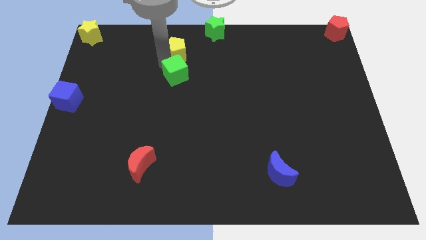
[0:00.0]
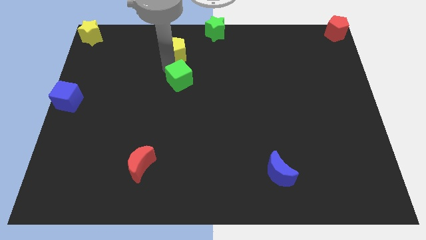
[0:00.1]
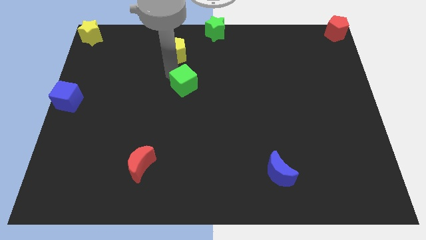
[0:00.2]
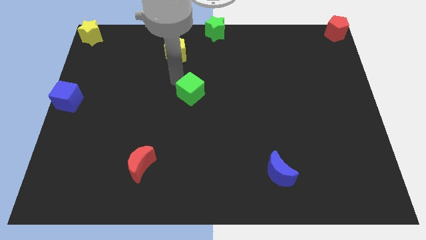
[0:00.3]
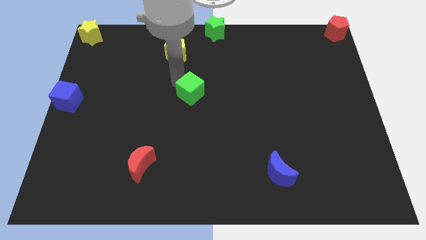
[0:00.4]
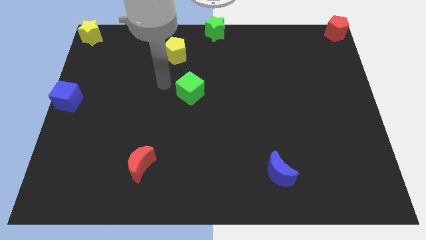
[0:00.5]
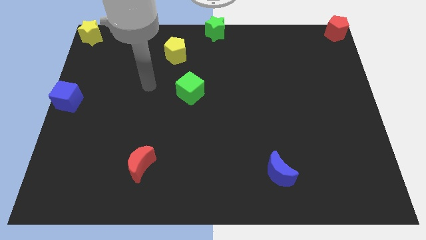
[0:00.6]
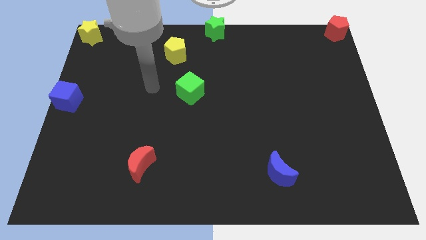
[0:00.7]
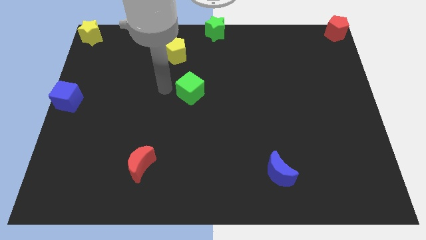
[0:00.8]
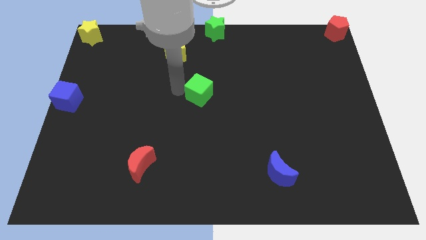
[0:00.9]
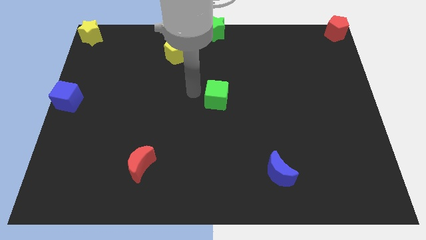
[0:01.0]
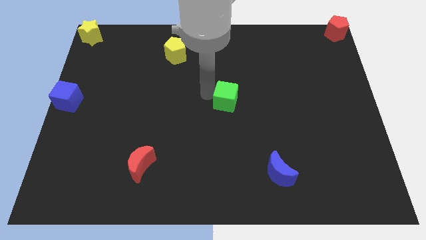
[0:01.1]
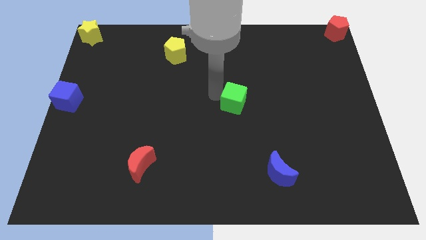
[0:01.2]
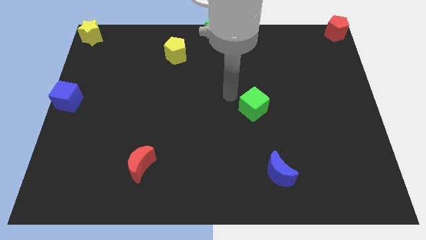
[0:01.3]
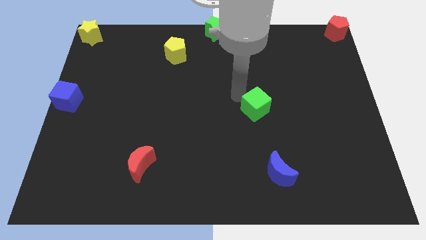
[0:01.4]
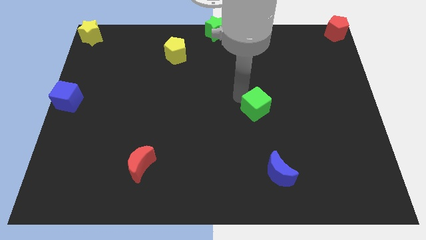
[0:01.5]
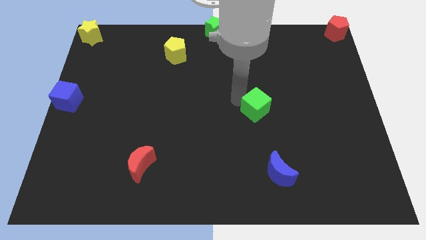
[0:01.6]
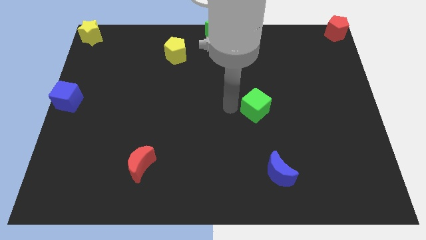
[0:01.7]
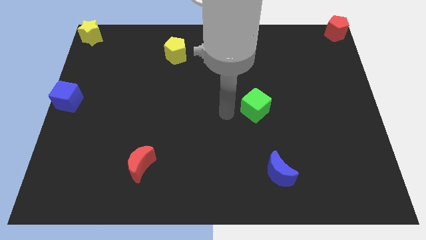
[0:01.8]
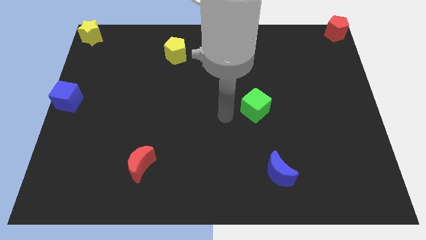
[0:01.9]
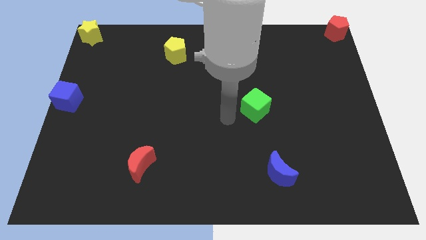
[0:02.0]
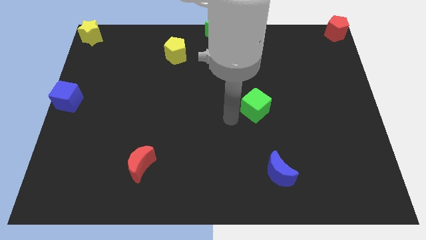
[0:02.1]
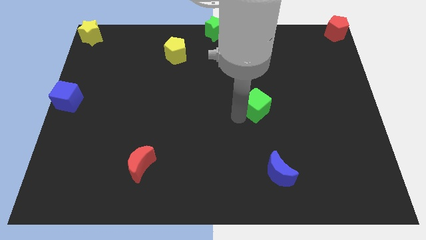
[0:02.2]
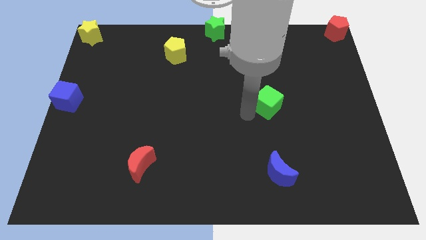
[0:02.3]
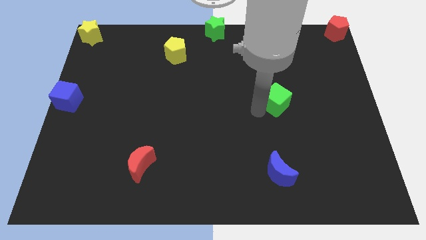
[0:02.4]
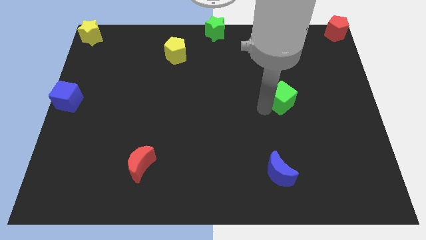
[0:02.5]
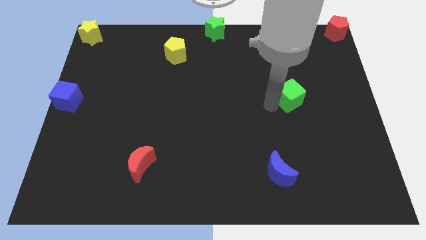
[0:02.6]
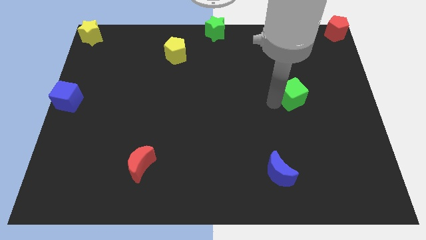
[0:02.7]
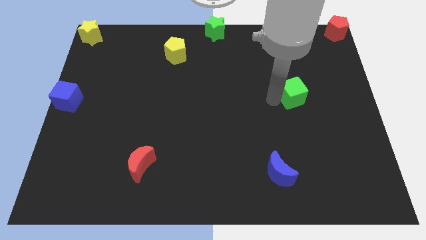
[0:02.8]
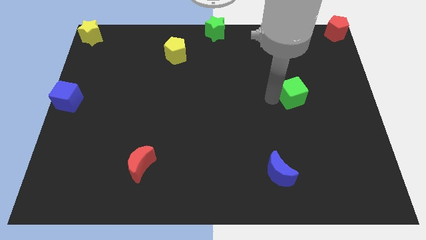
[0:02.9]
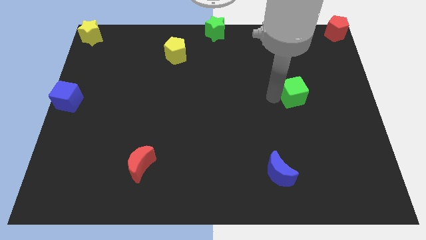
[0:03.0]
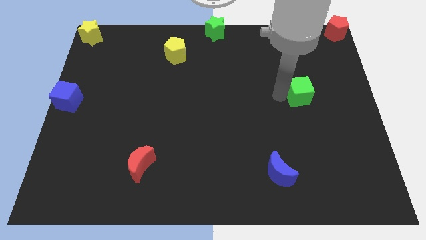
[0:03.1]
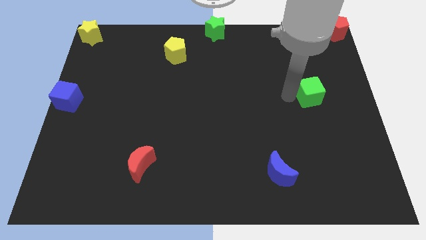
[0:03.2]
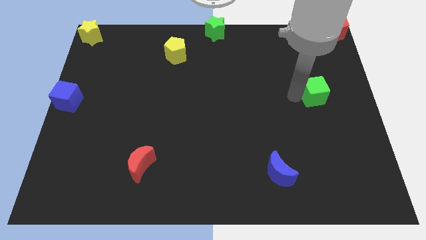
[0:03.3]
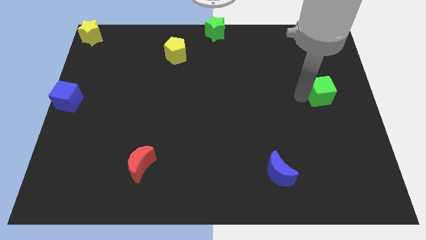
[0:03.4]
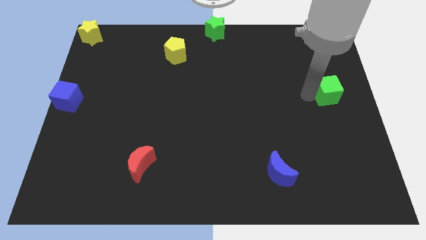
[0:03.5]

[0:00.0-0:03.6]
push the green cube away from the yellow pentagon

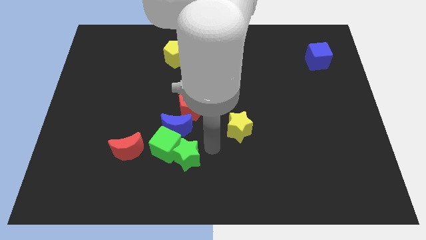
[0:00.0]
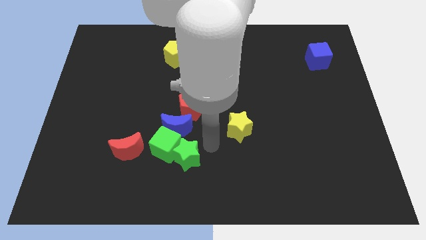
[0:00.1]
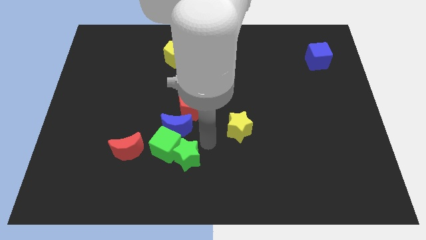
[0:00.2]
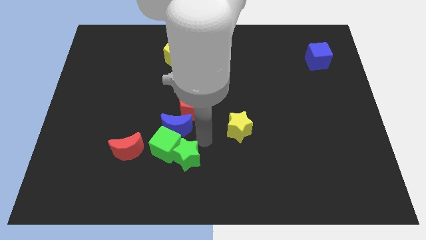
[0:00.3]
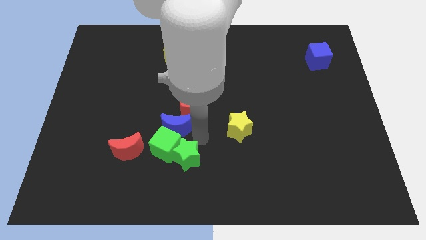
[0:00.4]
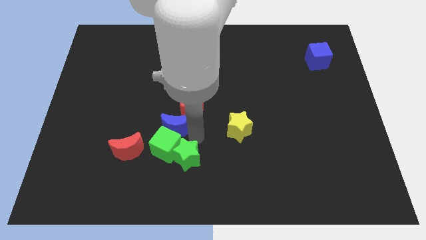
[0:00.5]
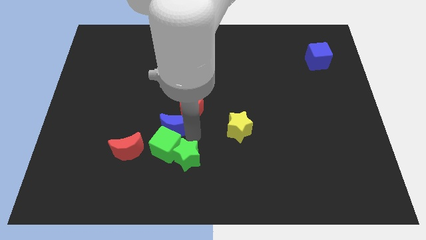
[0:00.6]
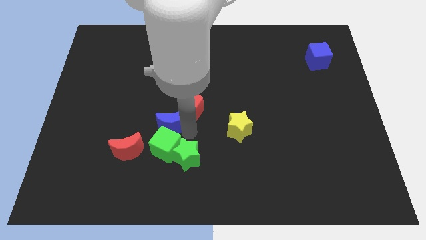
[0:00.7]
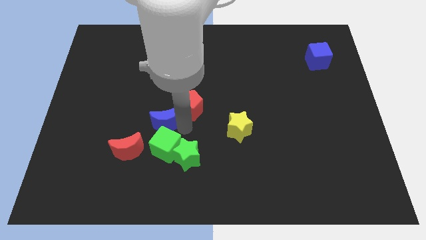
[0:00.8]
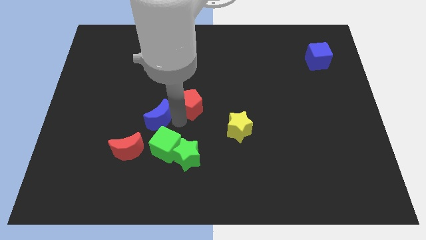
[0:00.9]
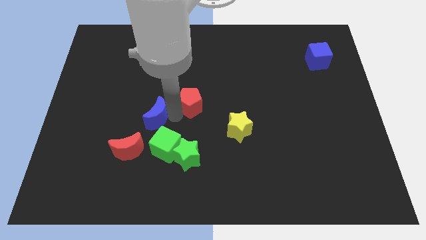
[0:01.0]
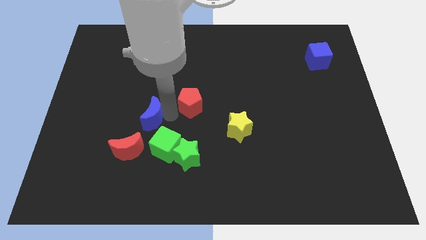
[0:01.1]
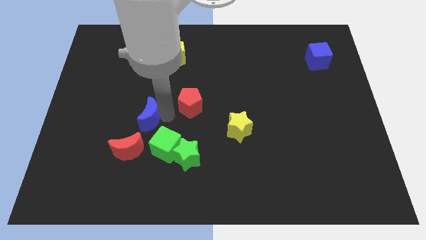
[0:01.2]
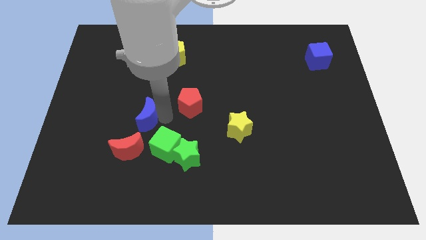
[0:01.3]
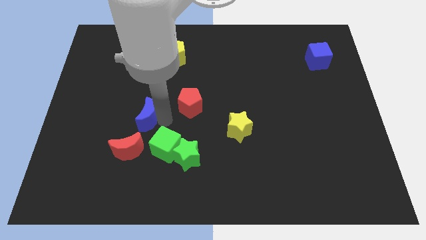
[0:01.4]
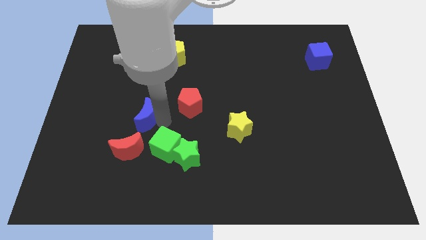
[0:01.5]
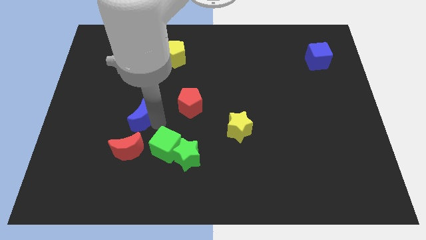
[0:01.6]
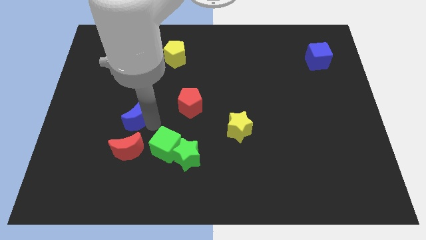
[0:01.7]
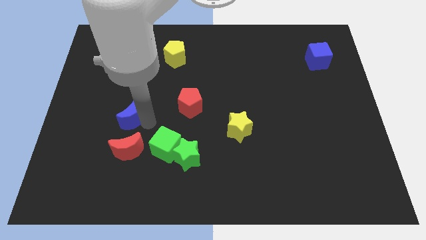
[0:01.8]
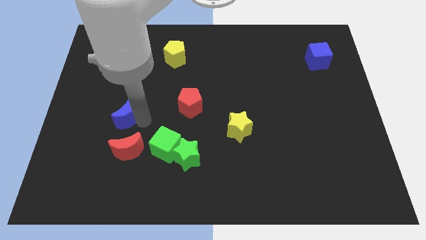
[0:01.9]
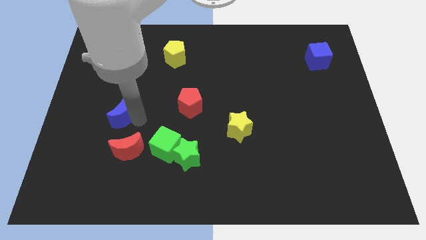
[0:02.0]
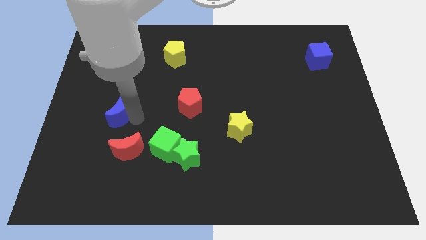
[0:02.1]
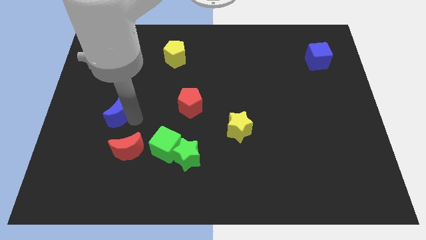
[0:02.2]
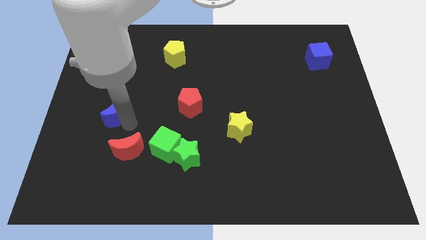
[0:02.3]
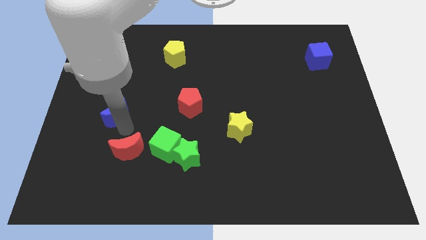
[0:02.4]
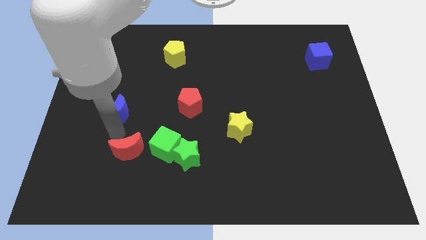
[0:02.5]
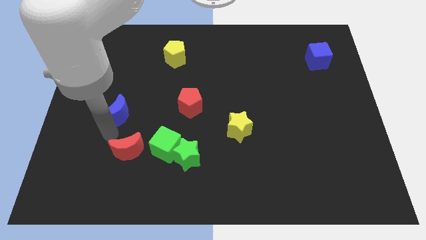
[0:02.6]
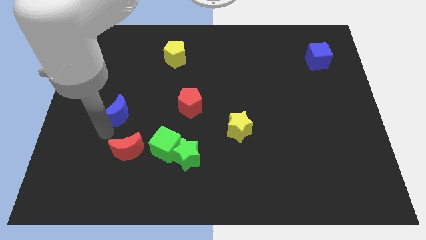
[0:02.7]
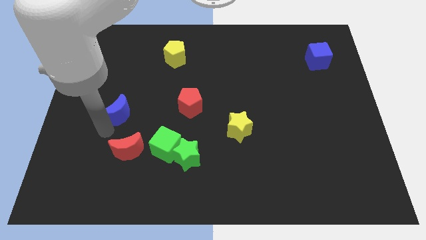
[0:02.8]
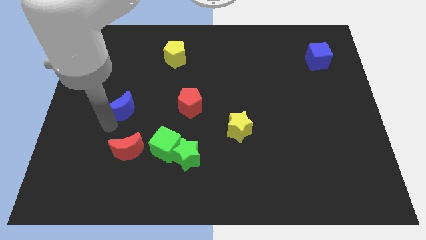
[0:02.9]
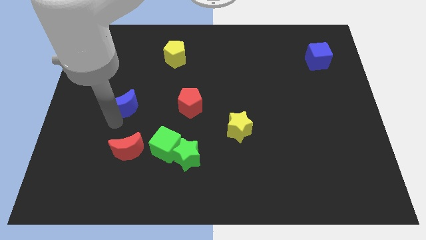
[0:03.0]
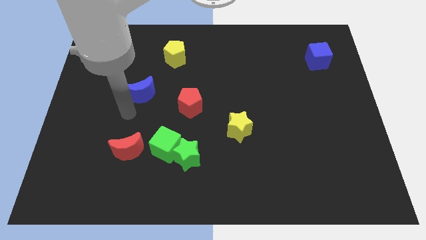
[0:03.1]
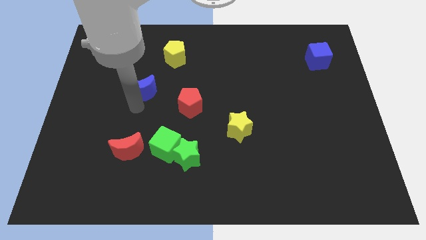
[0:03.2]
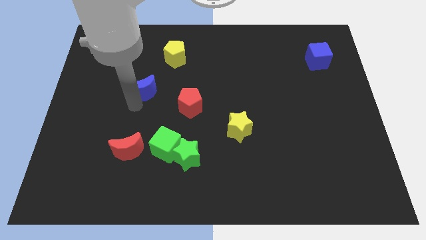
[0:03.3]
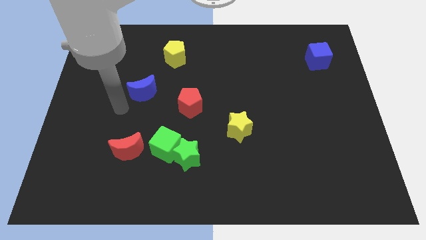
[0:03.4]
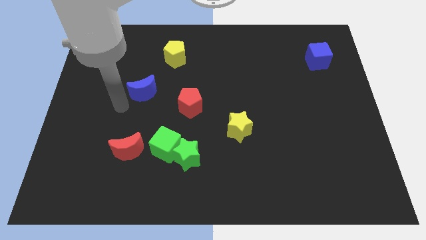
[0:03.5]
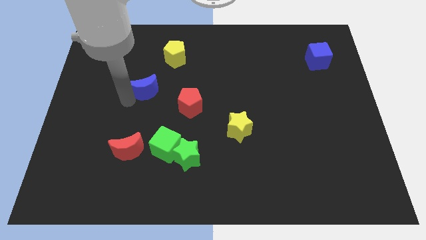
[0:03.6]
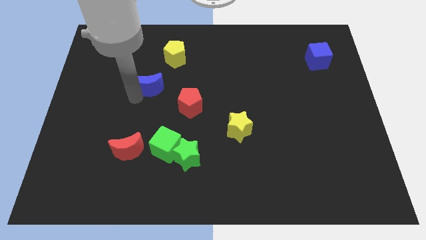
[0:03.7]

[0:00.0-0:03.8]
move the blue moon to the bottom left of the yellow pentagon

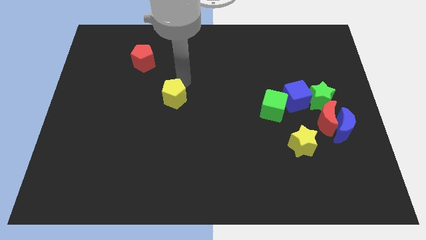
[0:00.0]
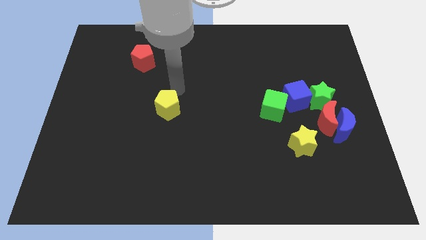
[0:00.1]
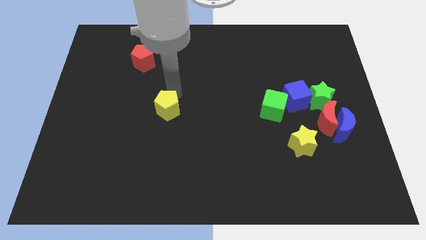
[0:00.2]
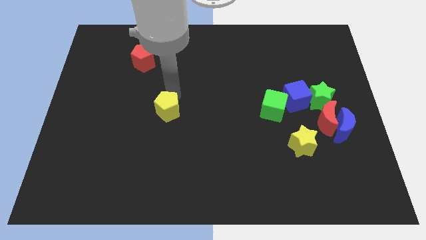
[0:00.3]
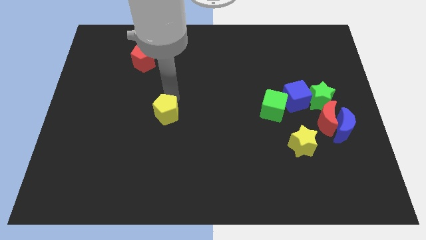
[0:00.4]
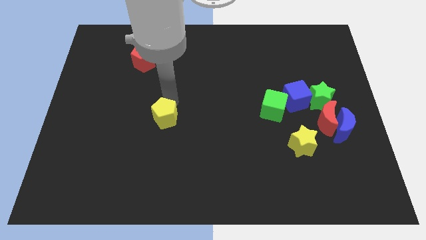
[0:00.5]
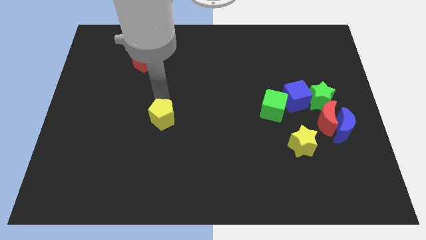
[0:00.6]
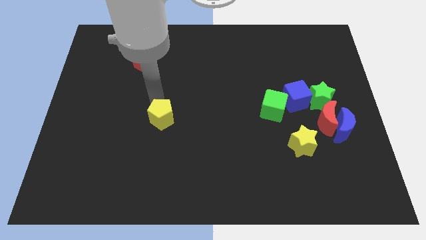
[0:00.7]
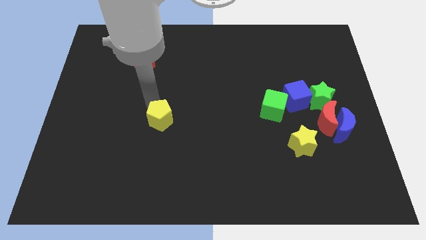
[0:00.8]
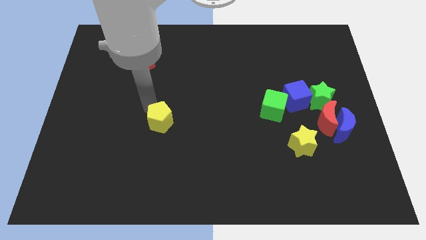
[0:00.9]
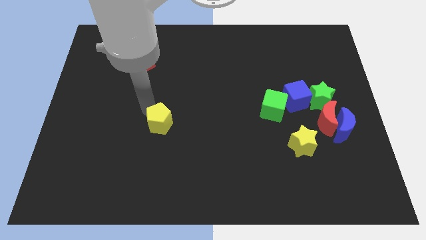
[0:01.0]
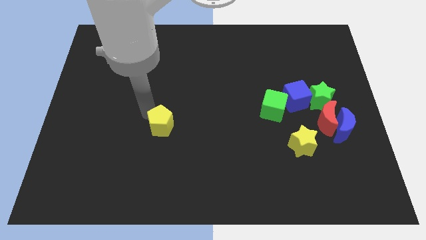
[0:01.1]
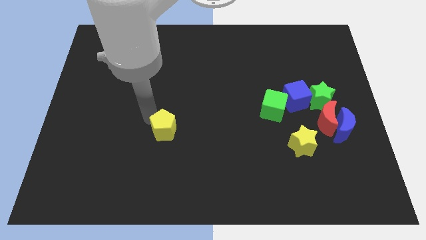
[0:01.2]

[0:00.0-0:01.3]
place the yellow pentagon towards downward

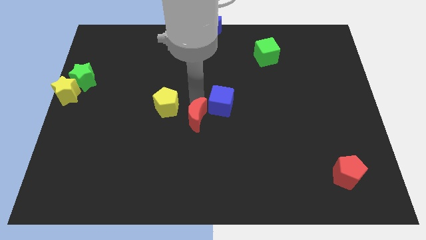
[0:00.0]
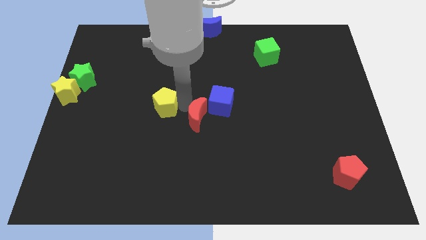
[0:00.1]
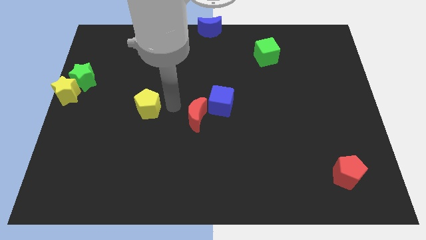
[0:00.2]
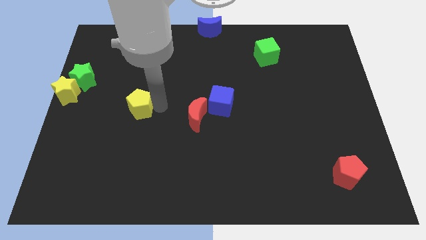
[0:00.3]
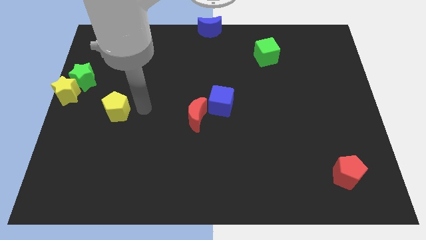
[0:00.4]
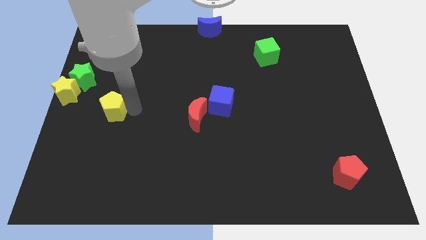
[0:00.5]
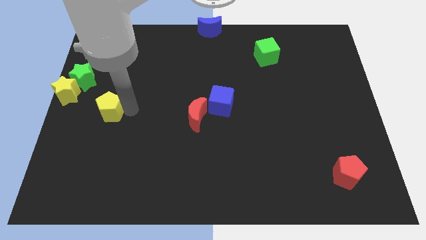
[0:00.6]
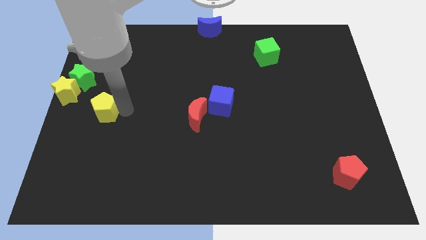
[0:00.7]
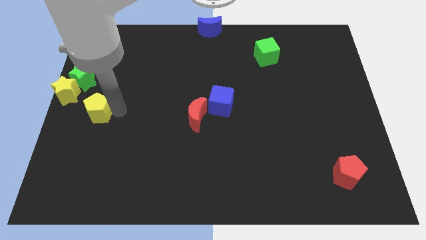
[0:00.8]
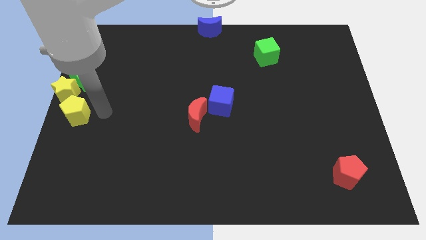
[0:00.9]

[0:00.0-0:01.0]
place yellow pentagon near yellow star
